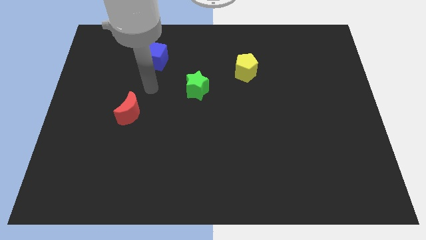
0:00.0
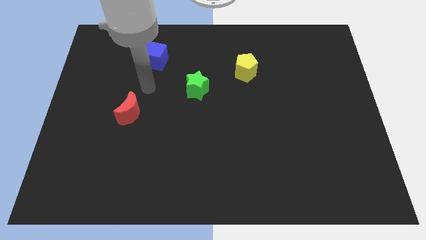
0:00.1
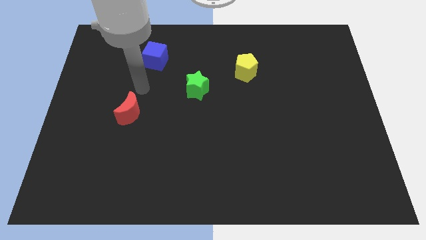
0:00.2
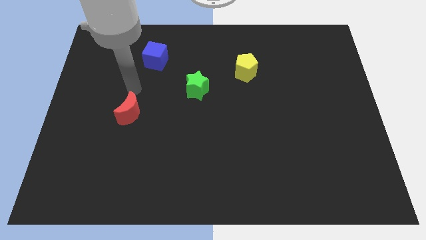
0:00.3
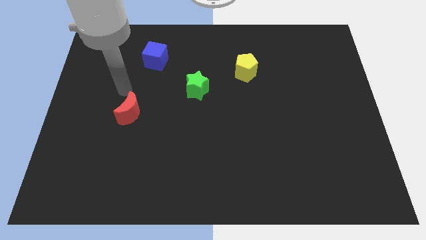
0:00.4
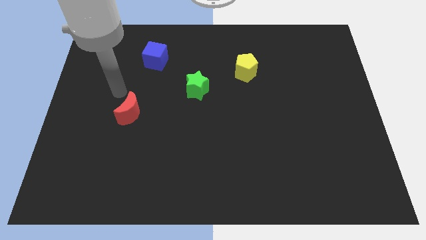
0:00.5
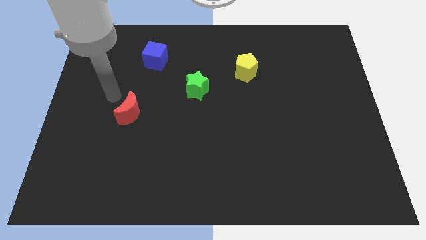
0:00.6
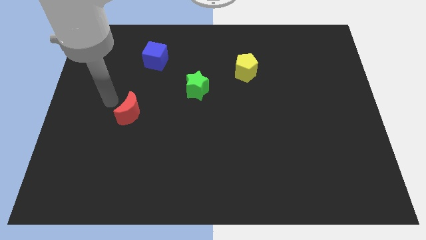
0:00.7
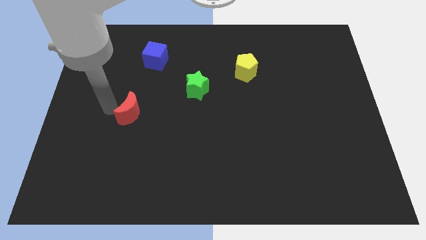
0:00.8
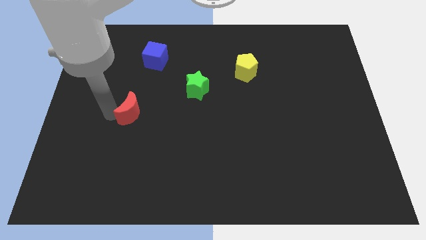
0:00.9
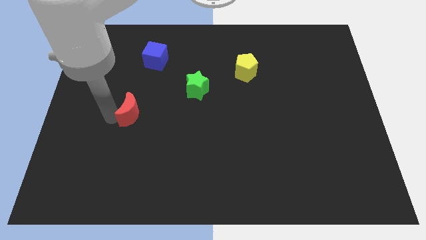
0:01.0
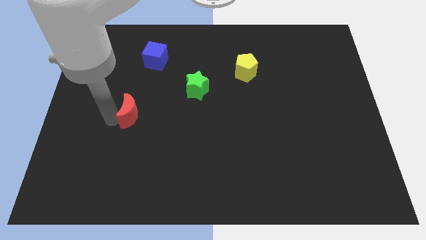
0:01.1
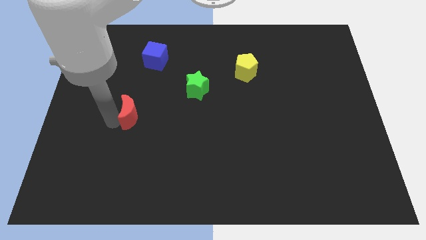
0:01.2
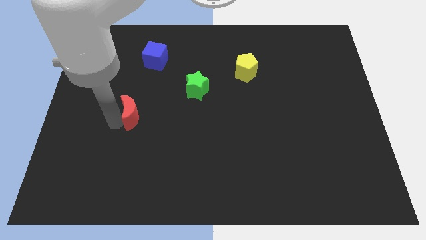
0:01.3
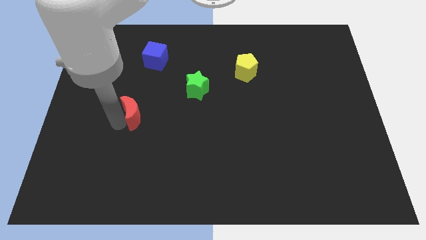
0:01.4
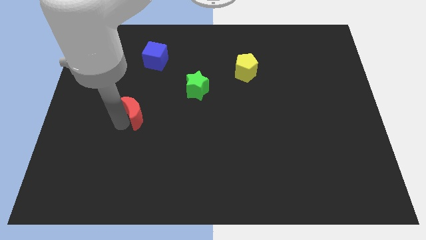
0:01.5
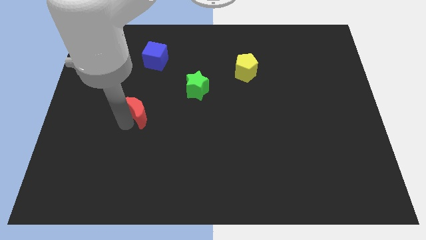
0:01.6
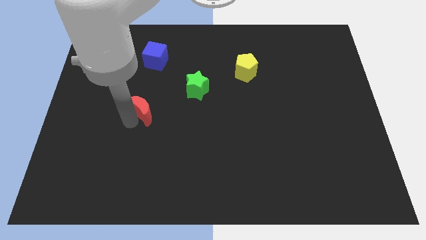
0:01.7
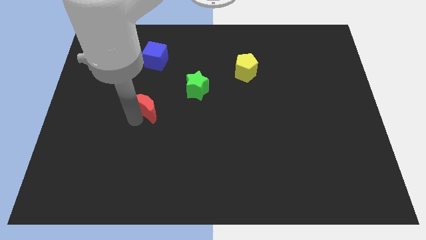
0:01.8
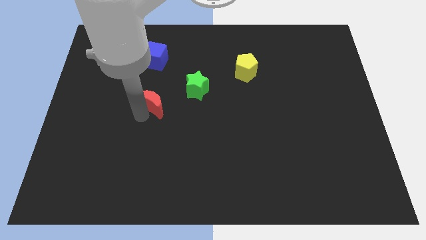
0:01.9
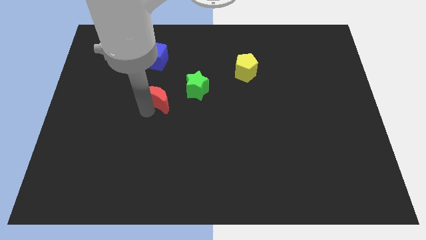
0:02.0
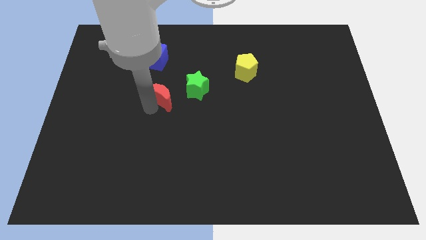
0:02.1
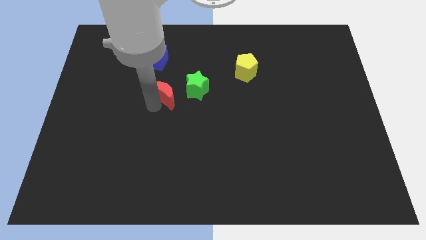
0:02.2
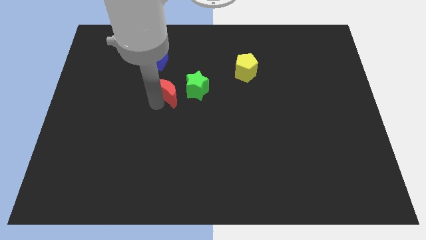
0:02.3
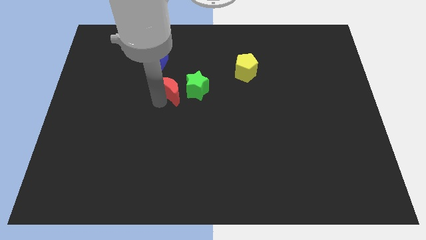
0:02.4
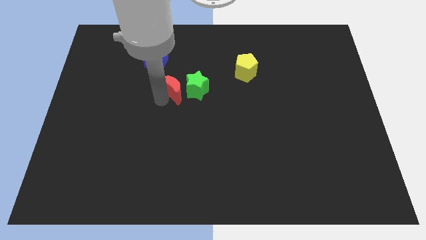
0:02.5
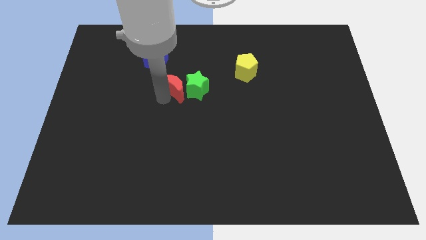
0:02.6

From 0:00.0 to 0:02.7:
put the red moon close to the green block

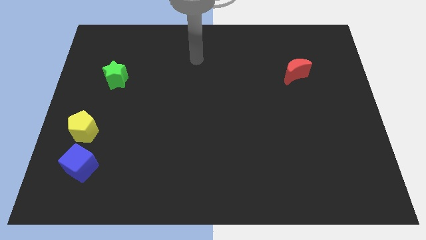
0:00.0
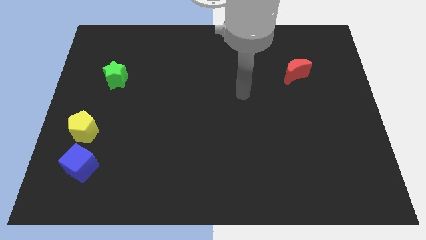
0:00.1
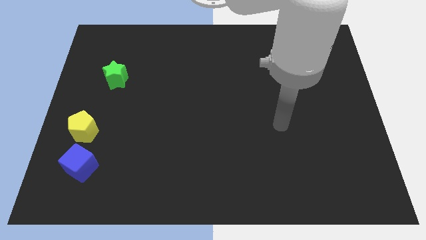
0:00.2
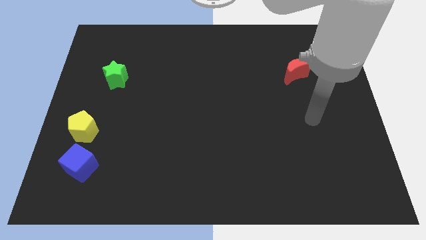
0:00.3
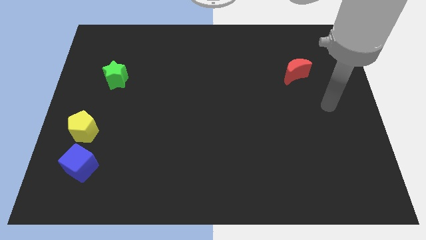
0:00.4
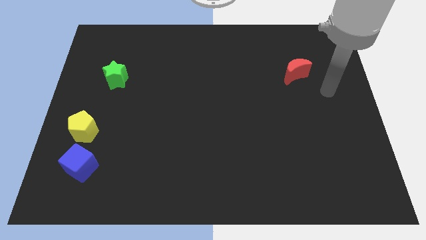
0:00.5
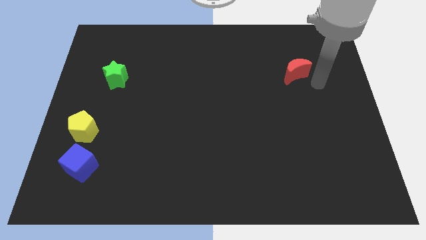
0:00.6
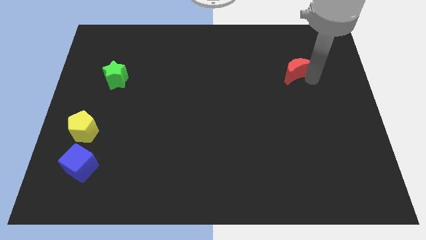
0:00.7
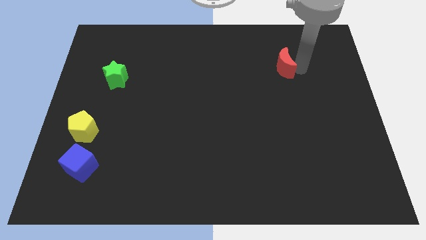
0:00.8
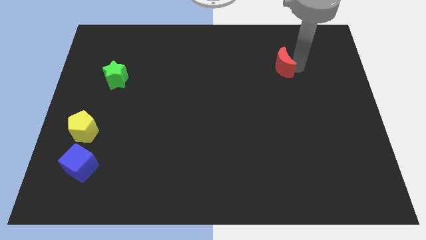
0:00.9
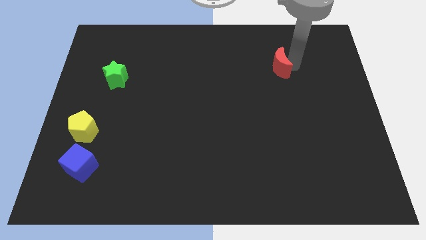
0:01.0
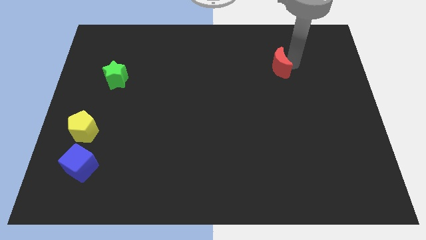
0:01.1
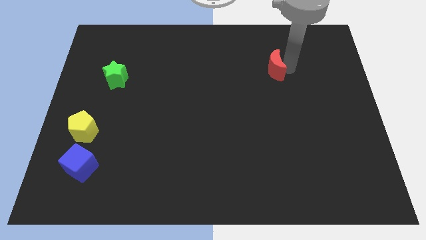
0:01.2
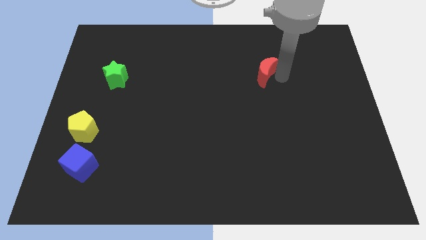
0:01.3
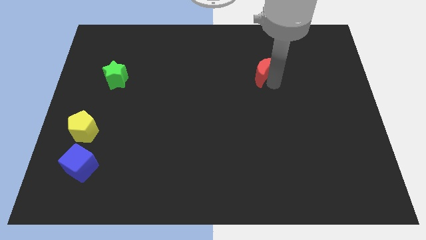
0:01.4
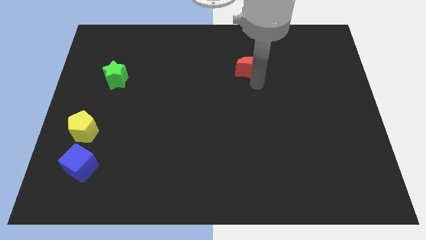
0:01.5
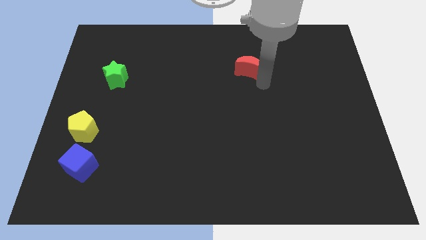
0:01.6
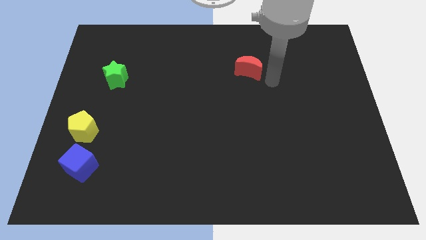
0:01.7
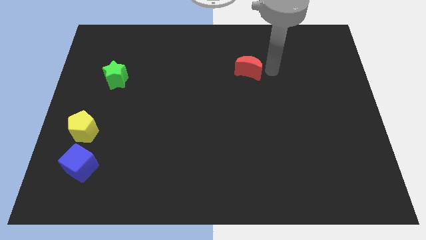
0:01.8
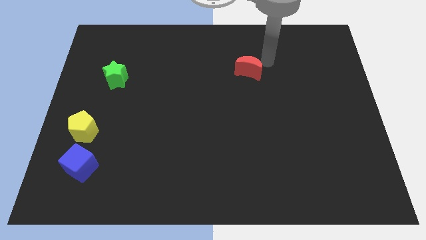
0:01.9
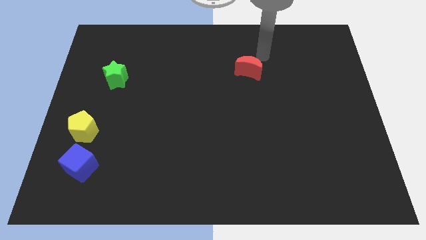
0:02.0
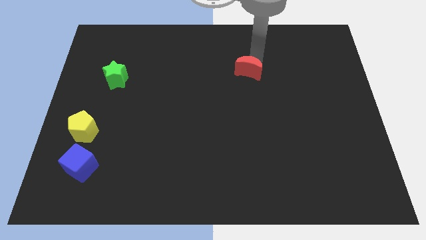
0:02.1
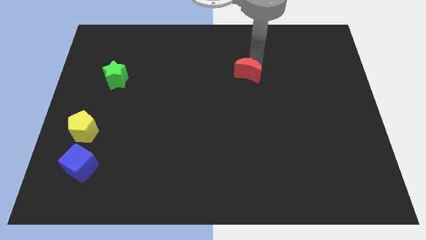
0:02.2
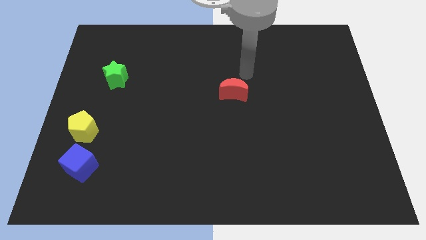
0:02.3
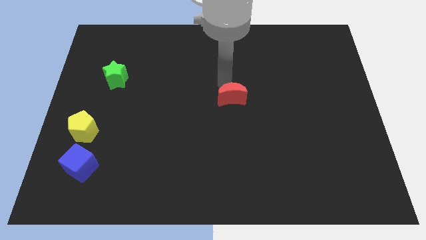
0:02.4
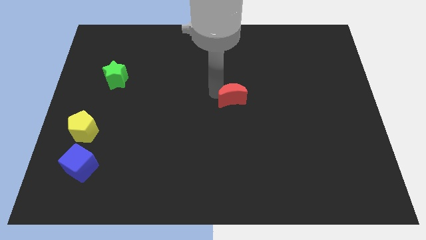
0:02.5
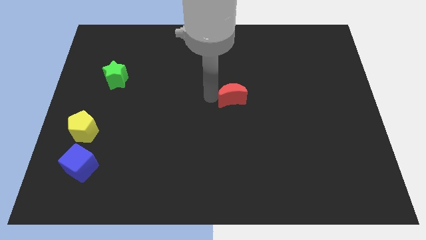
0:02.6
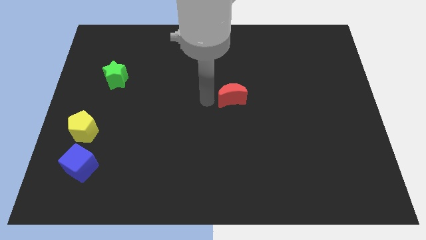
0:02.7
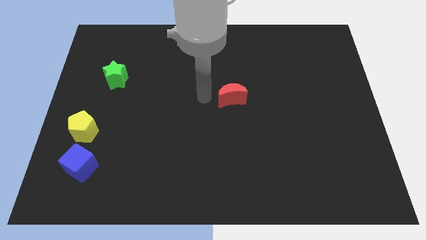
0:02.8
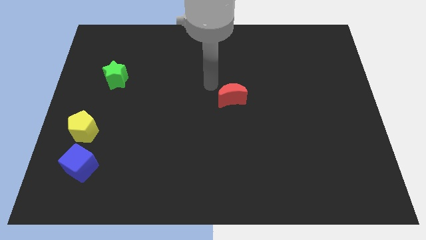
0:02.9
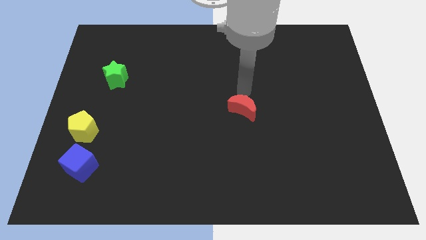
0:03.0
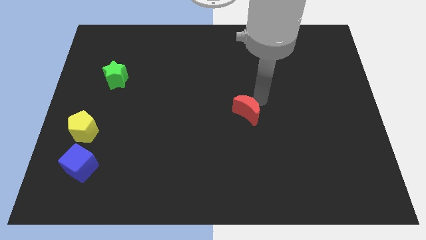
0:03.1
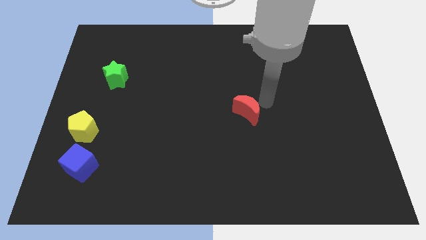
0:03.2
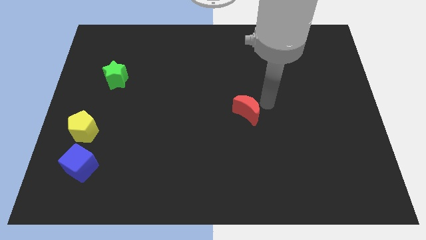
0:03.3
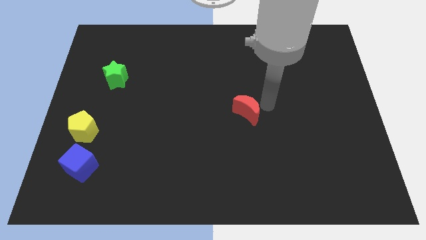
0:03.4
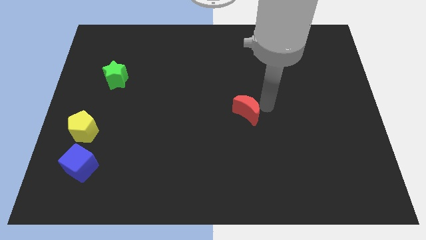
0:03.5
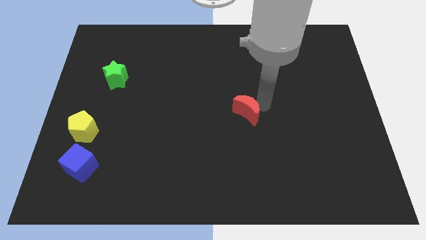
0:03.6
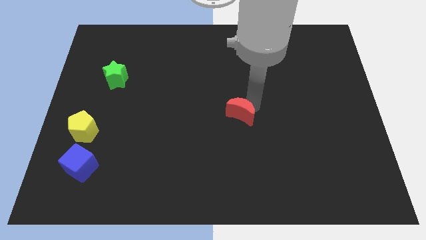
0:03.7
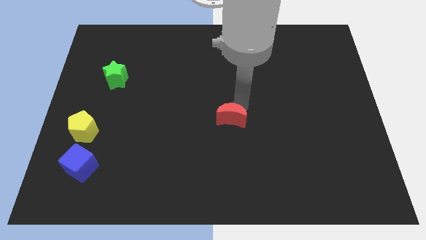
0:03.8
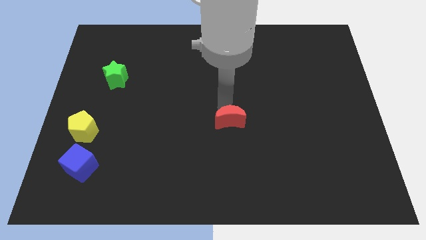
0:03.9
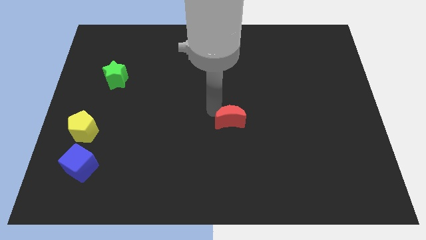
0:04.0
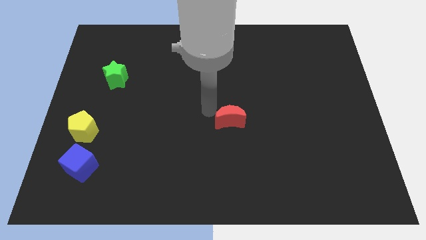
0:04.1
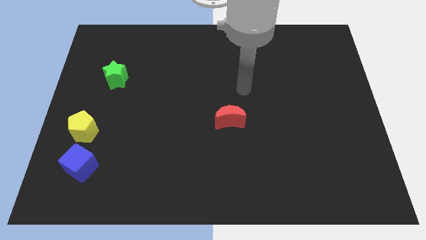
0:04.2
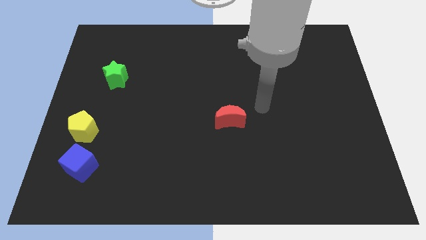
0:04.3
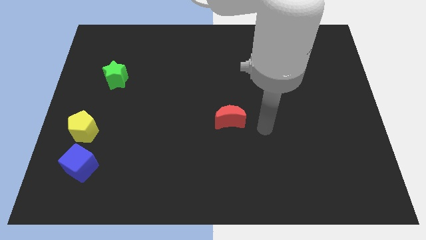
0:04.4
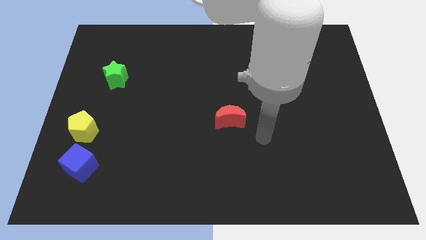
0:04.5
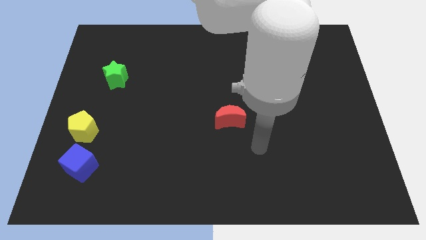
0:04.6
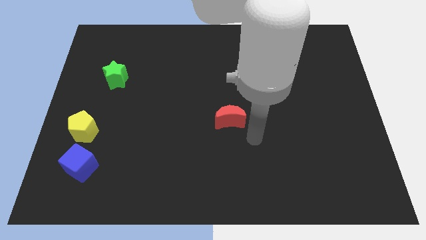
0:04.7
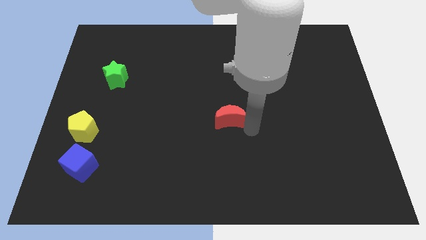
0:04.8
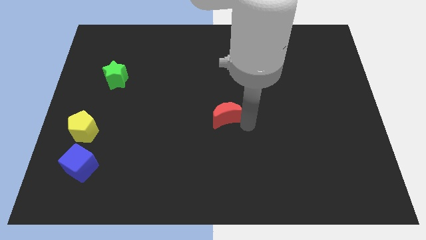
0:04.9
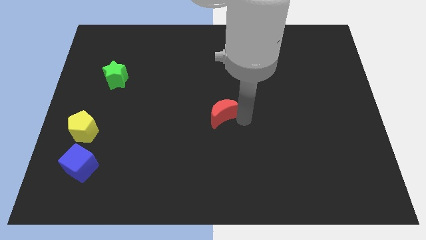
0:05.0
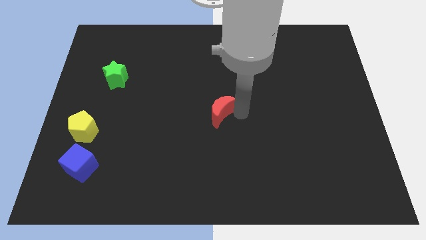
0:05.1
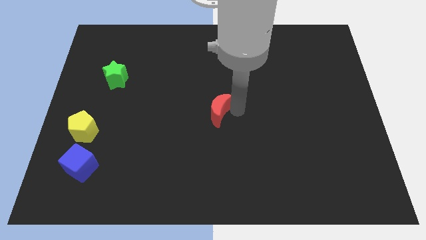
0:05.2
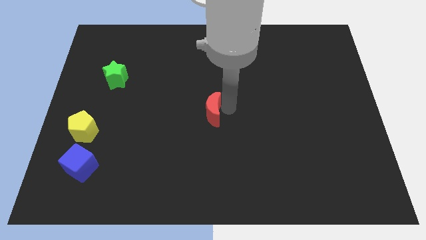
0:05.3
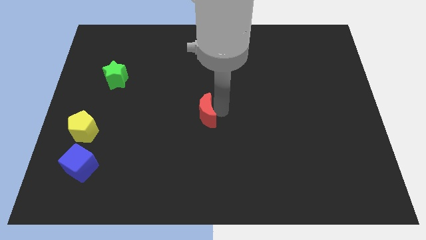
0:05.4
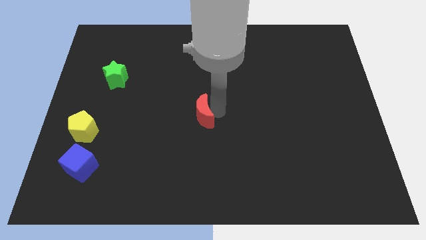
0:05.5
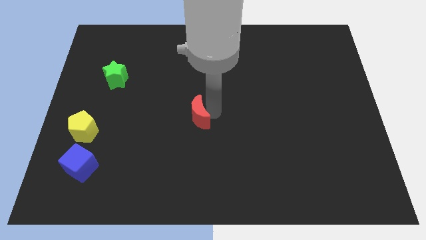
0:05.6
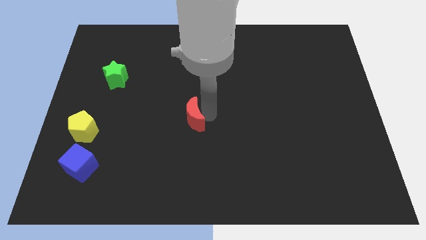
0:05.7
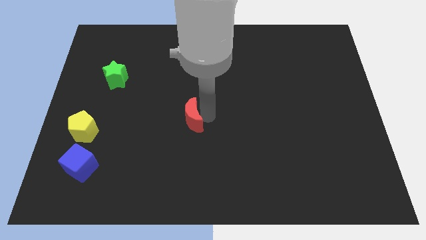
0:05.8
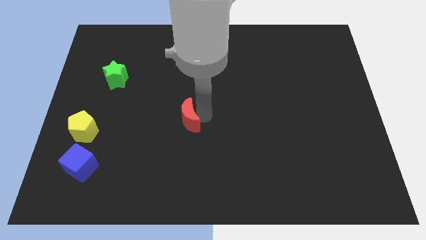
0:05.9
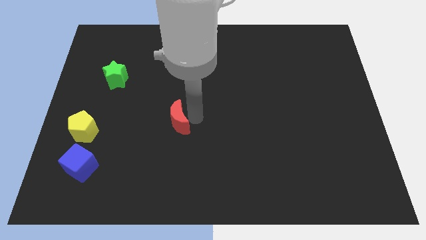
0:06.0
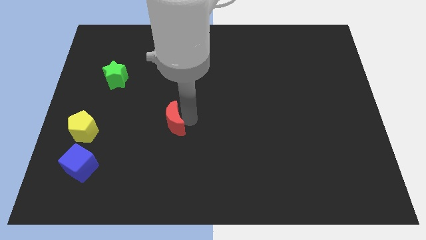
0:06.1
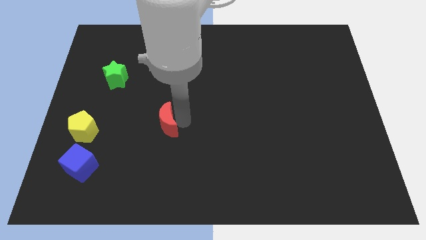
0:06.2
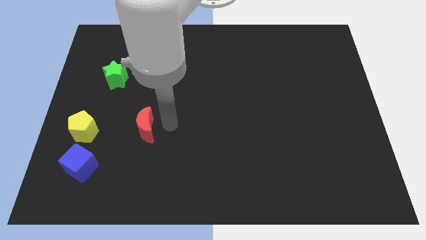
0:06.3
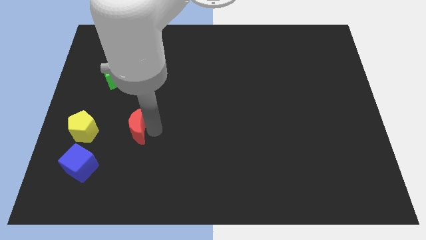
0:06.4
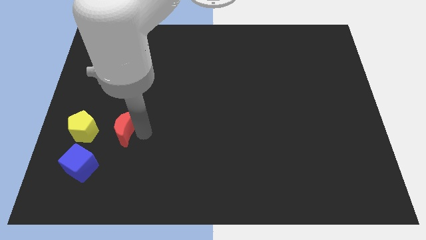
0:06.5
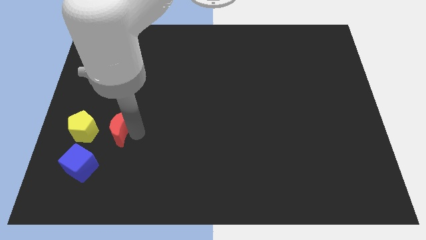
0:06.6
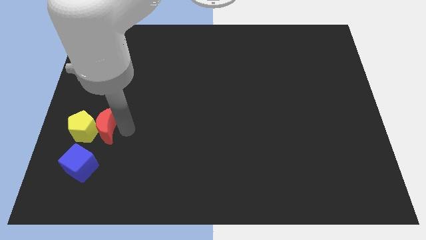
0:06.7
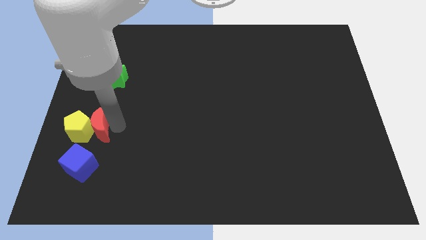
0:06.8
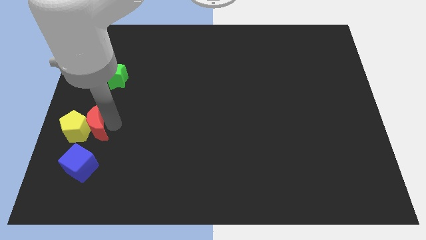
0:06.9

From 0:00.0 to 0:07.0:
put the moon towards the yellow block
